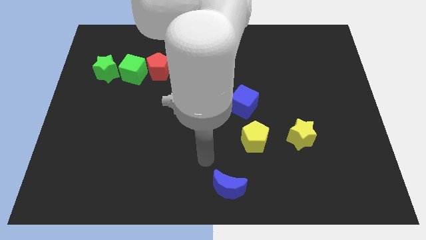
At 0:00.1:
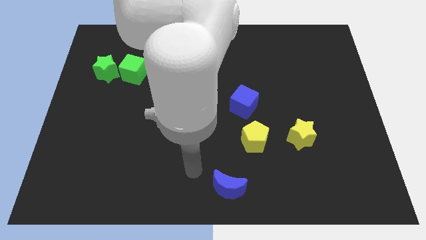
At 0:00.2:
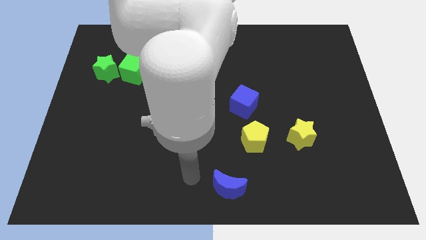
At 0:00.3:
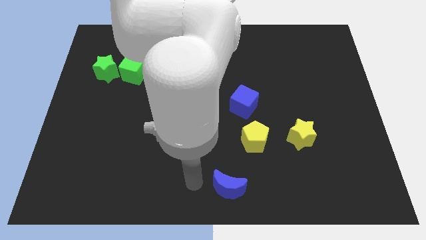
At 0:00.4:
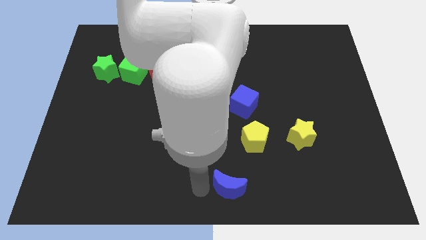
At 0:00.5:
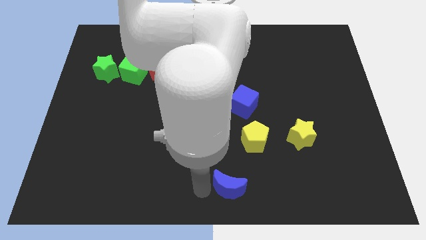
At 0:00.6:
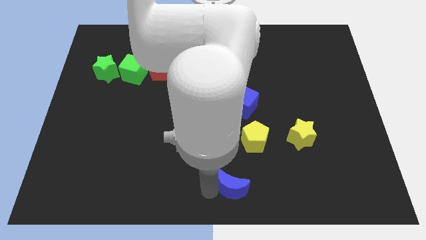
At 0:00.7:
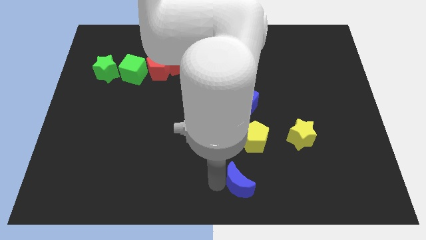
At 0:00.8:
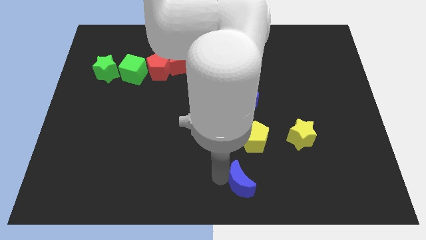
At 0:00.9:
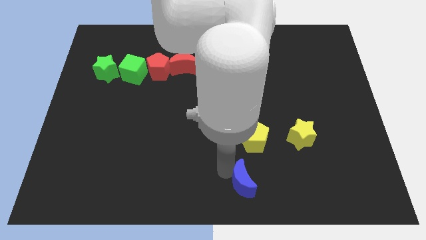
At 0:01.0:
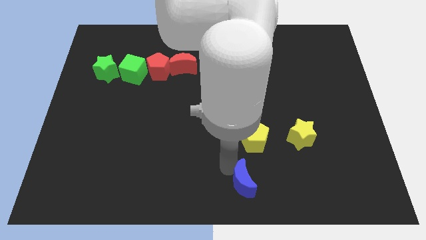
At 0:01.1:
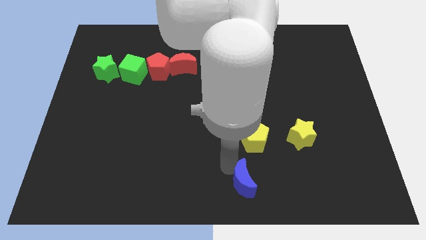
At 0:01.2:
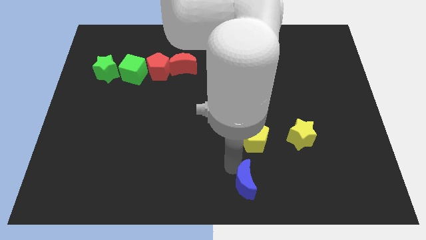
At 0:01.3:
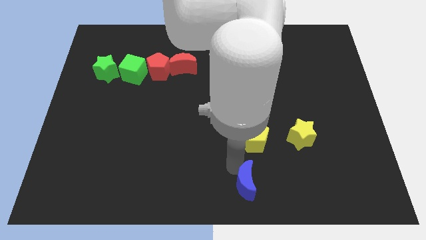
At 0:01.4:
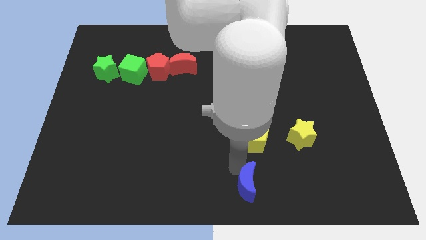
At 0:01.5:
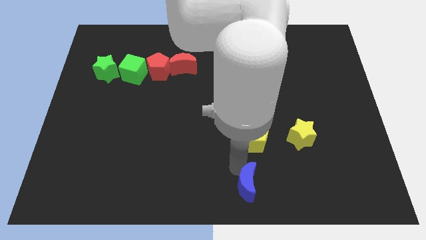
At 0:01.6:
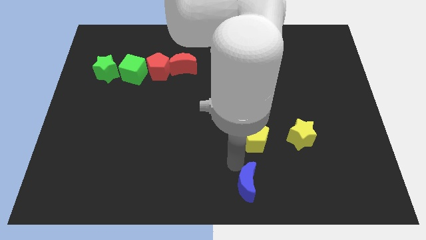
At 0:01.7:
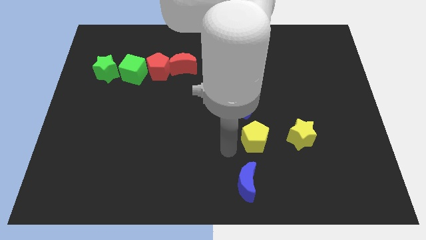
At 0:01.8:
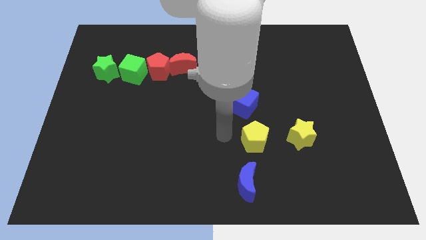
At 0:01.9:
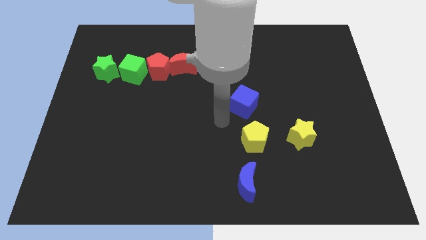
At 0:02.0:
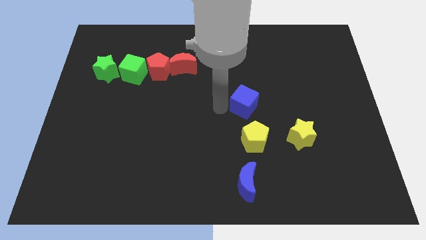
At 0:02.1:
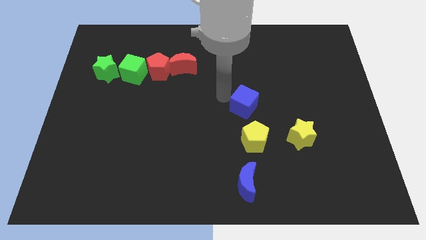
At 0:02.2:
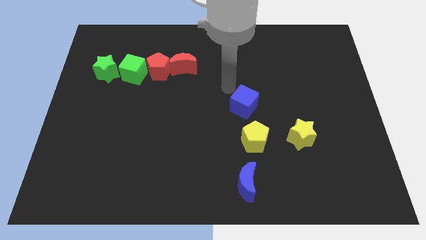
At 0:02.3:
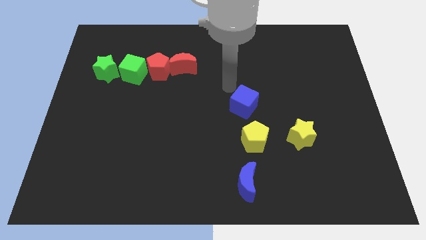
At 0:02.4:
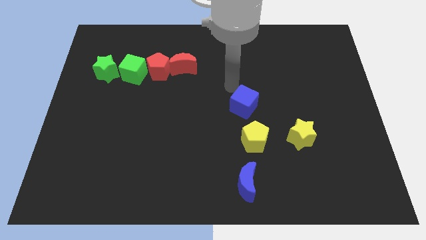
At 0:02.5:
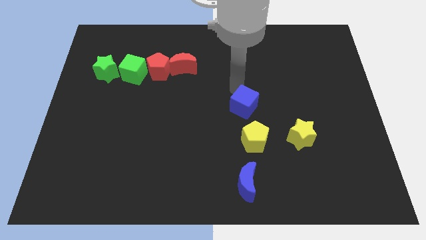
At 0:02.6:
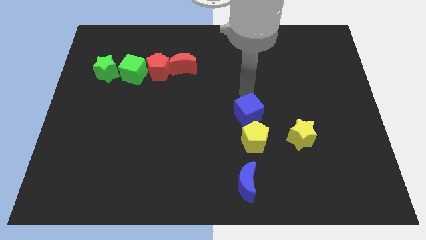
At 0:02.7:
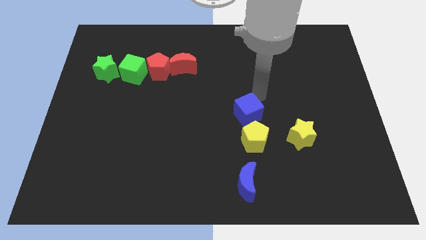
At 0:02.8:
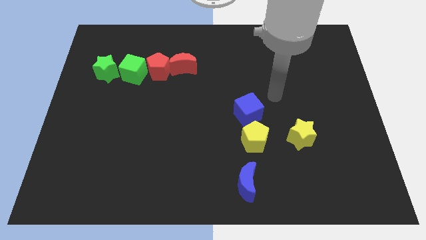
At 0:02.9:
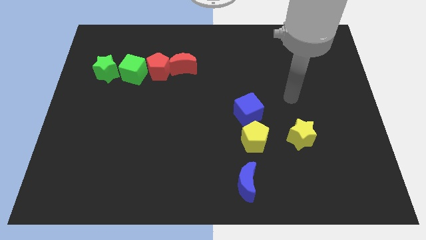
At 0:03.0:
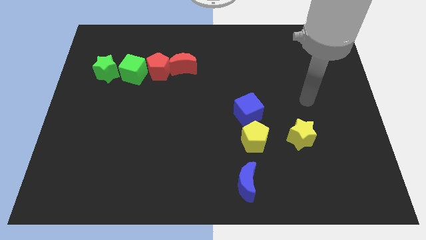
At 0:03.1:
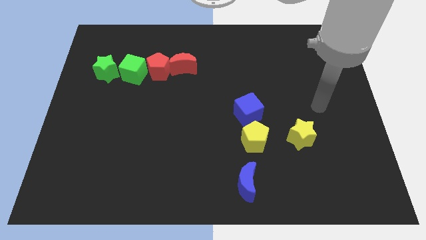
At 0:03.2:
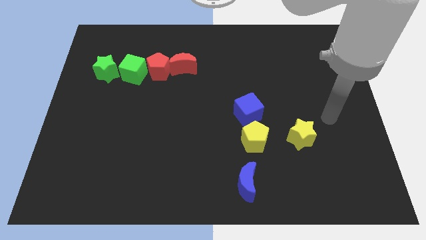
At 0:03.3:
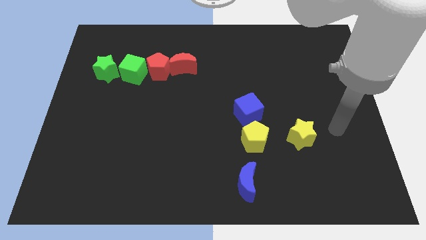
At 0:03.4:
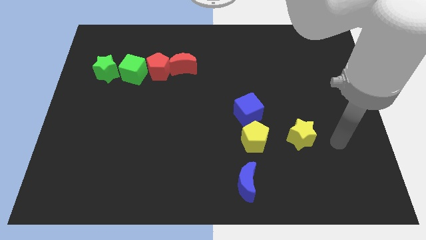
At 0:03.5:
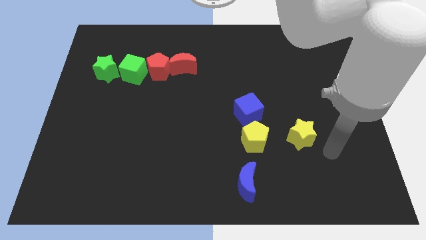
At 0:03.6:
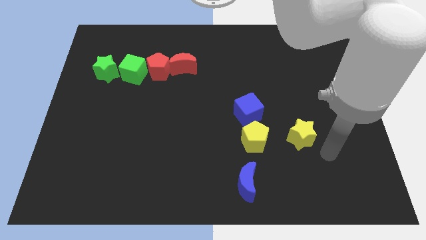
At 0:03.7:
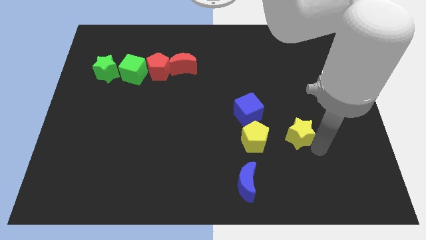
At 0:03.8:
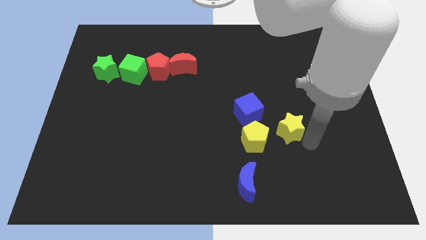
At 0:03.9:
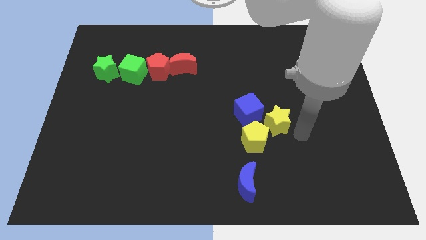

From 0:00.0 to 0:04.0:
push the yellow star to the top right side of the yellow pentagon

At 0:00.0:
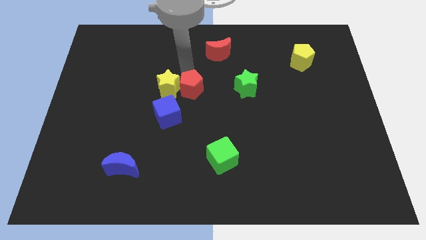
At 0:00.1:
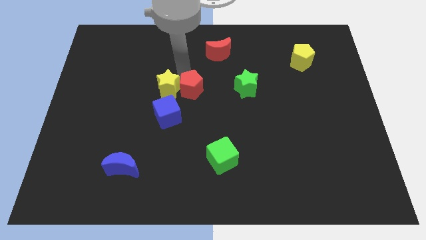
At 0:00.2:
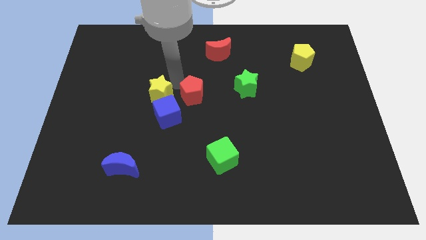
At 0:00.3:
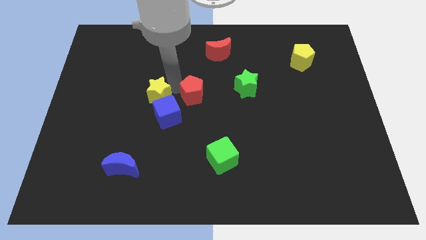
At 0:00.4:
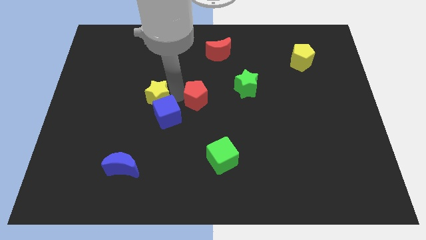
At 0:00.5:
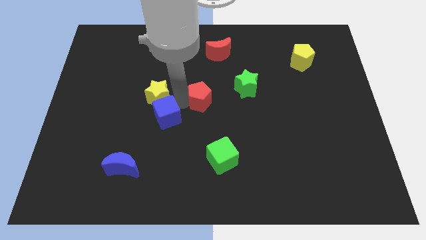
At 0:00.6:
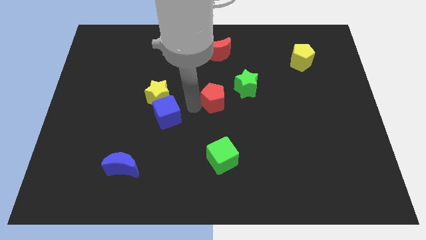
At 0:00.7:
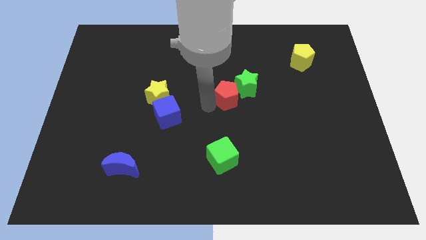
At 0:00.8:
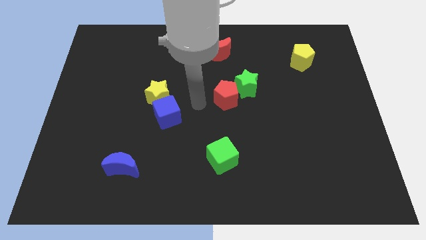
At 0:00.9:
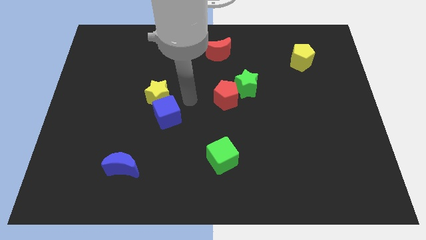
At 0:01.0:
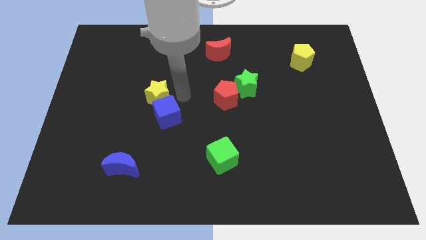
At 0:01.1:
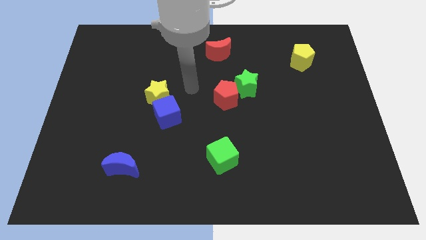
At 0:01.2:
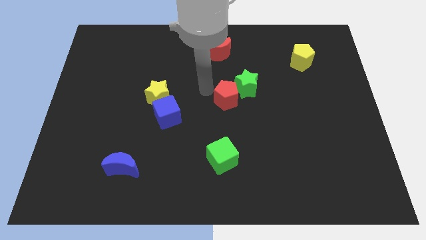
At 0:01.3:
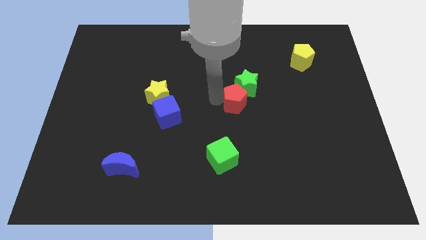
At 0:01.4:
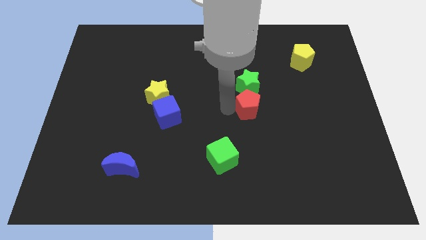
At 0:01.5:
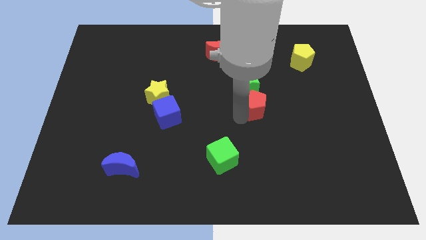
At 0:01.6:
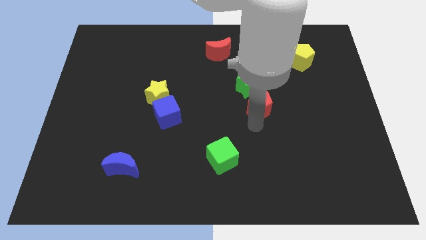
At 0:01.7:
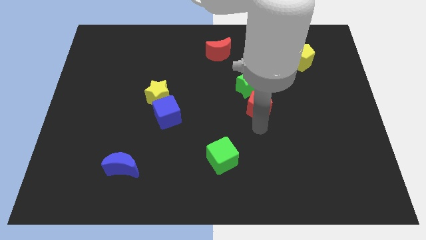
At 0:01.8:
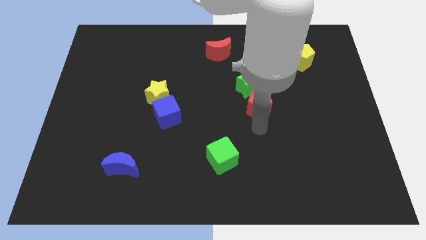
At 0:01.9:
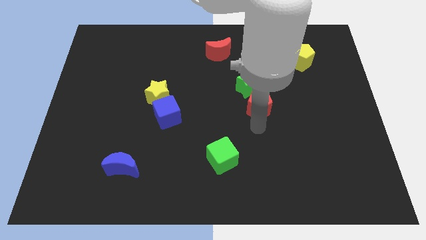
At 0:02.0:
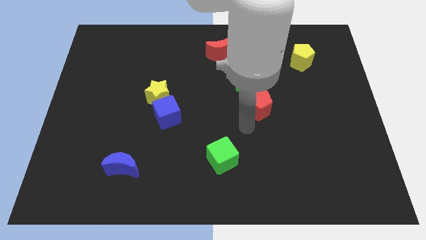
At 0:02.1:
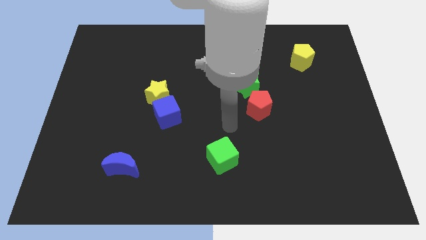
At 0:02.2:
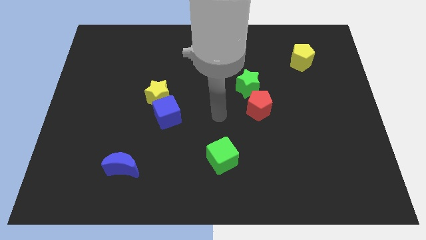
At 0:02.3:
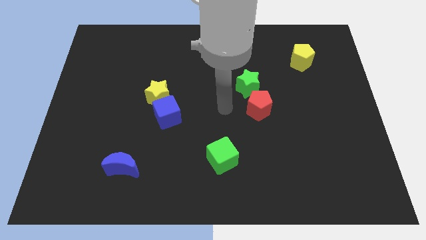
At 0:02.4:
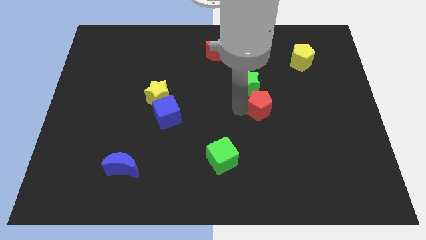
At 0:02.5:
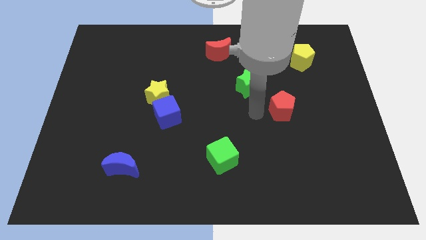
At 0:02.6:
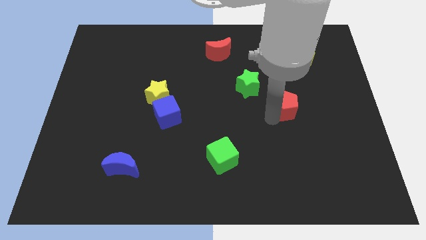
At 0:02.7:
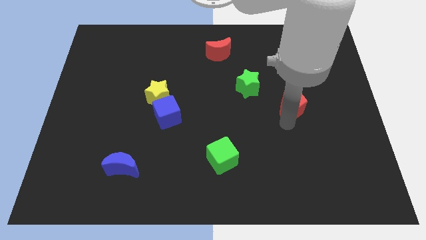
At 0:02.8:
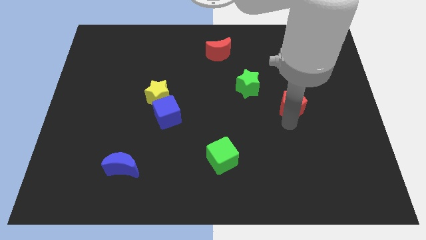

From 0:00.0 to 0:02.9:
move the red pentagon towards green star

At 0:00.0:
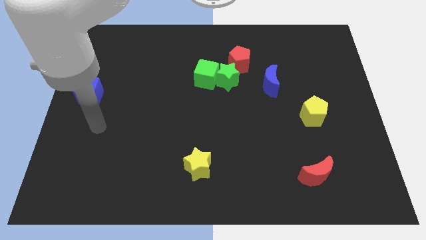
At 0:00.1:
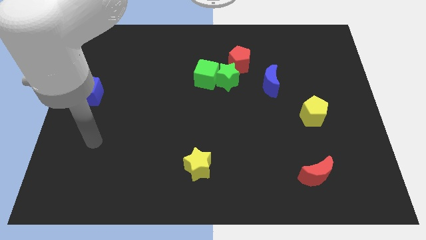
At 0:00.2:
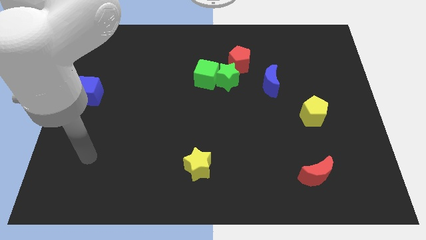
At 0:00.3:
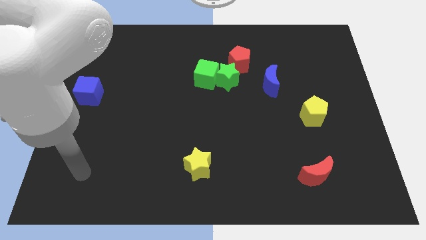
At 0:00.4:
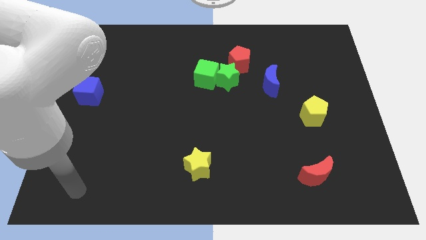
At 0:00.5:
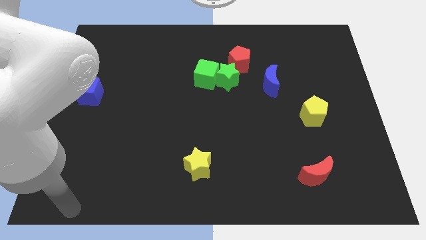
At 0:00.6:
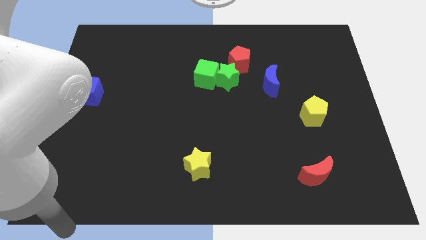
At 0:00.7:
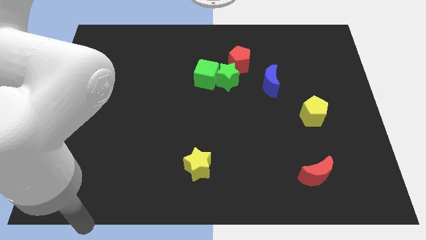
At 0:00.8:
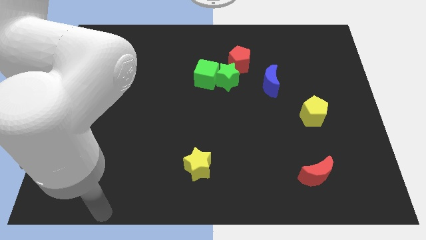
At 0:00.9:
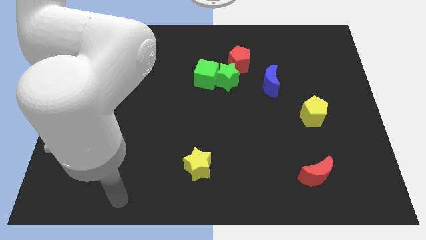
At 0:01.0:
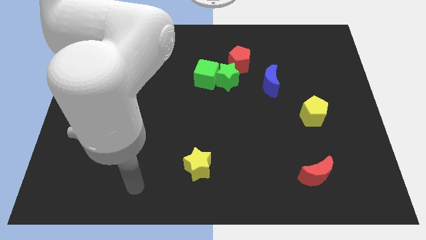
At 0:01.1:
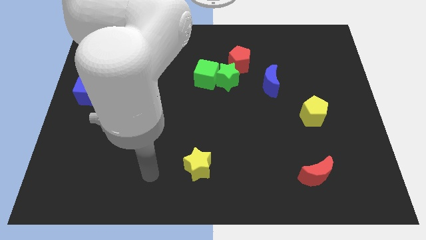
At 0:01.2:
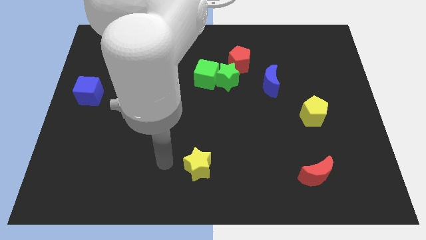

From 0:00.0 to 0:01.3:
point your arm at the left of the yellow star

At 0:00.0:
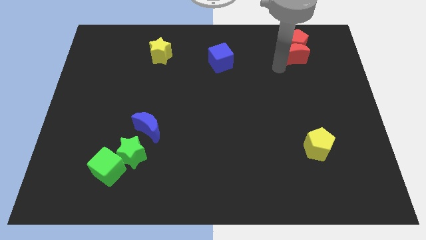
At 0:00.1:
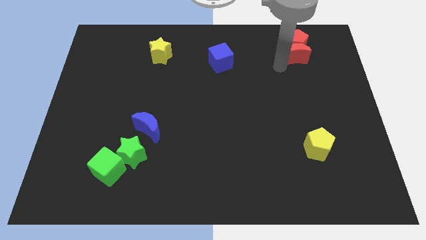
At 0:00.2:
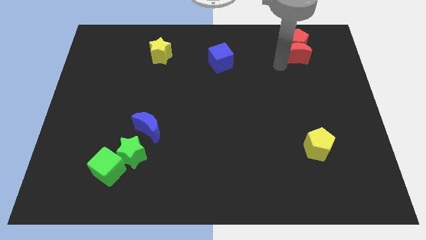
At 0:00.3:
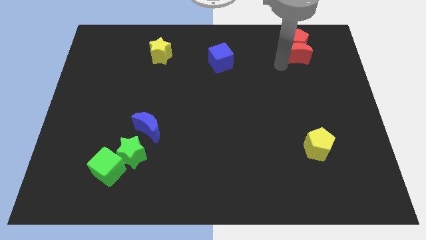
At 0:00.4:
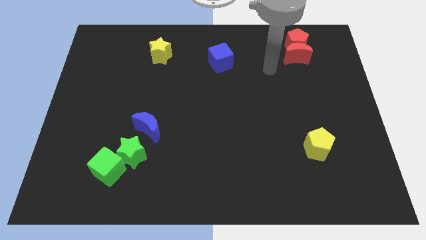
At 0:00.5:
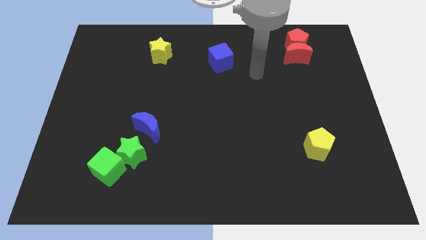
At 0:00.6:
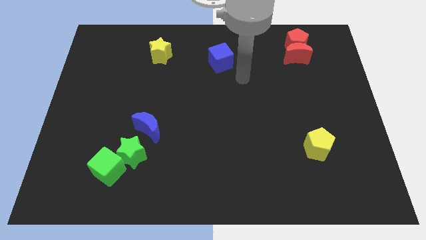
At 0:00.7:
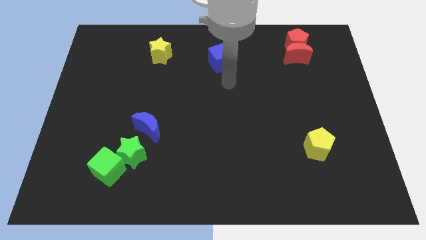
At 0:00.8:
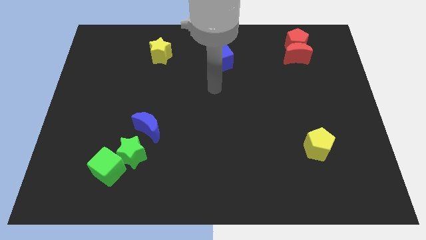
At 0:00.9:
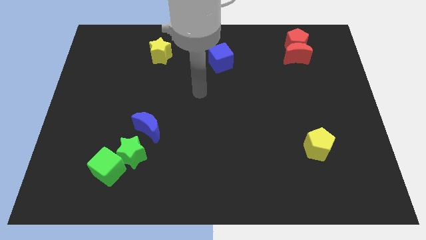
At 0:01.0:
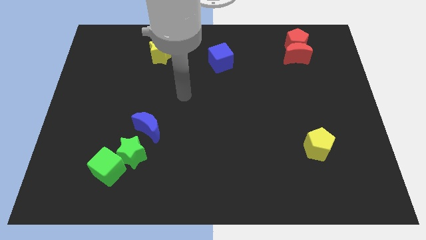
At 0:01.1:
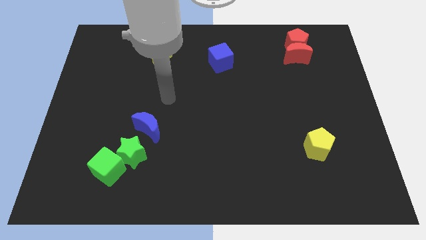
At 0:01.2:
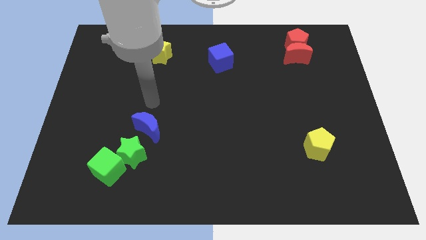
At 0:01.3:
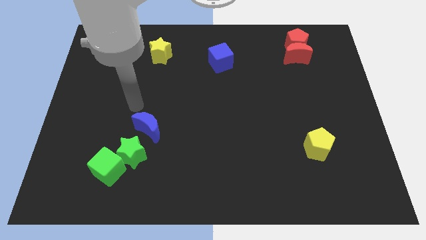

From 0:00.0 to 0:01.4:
move arm above the blue moon
